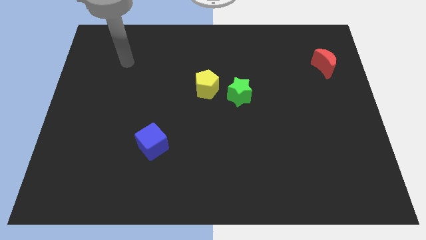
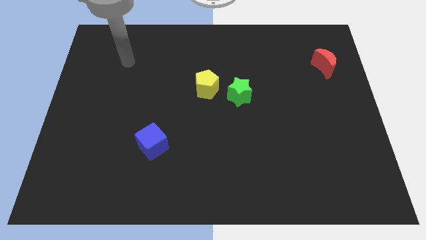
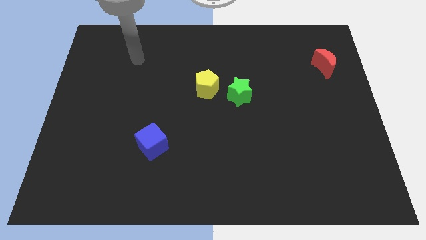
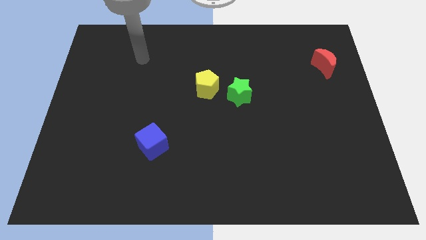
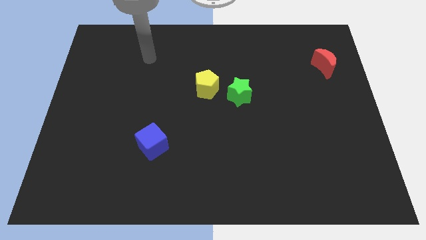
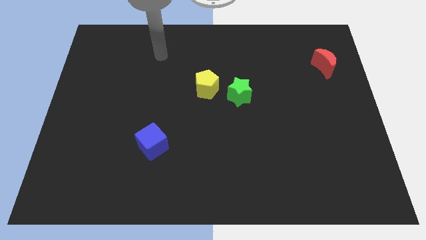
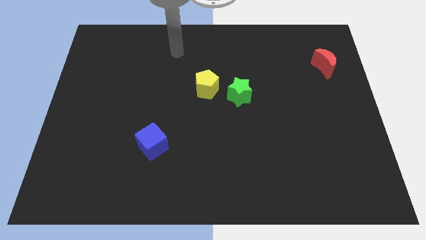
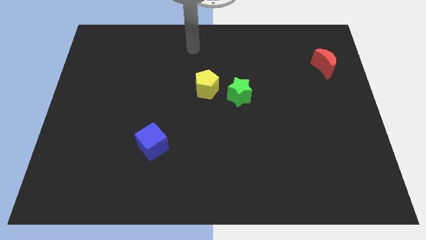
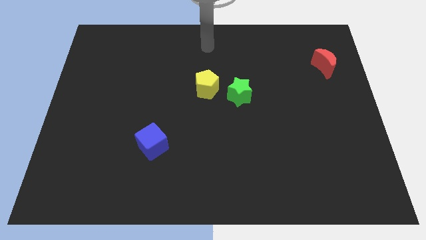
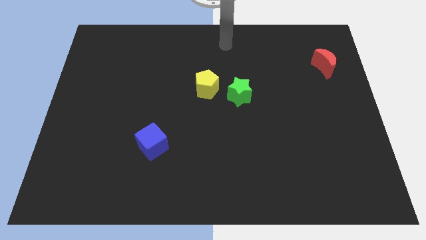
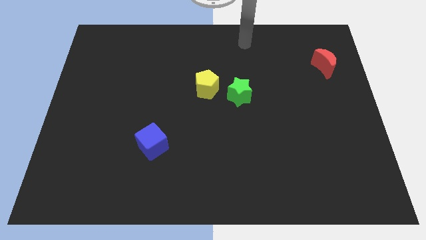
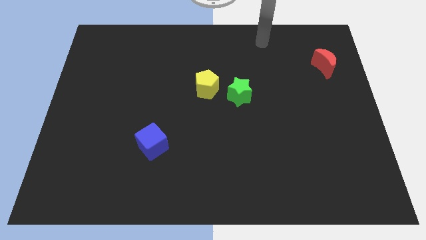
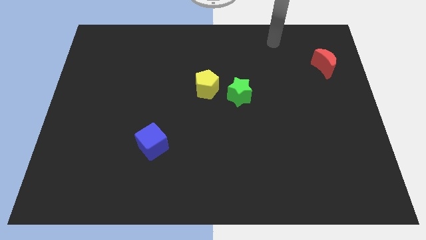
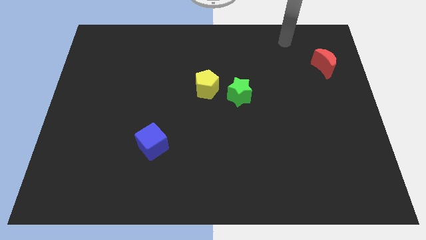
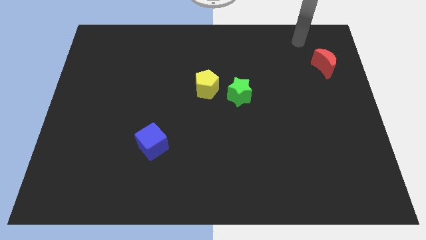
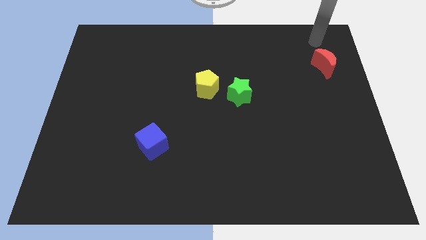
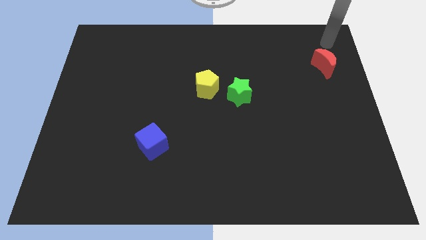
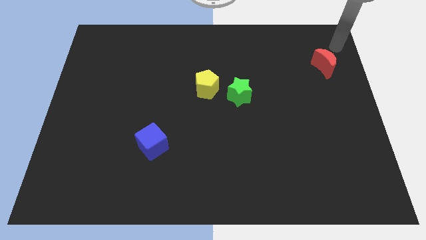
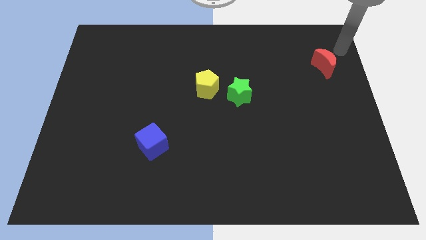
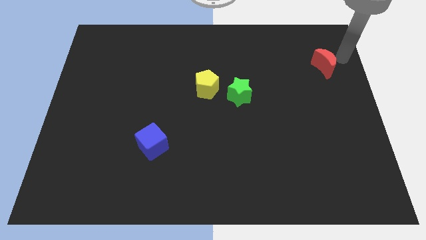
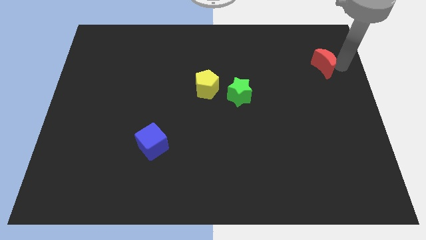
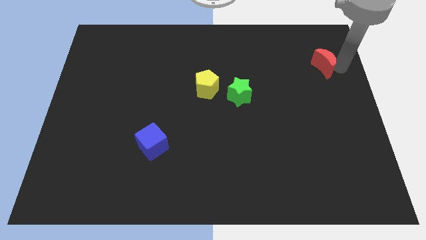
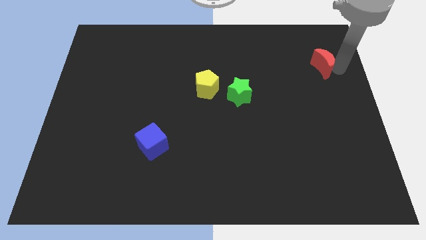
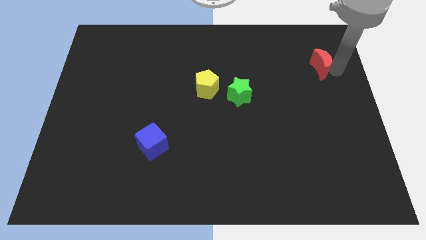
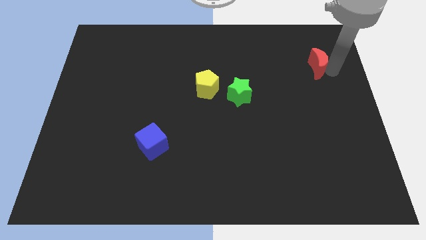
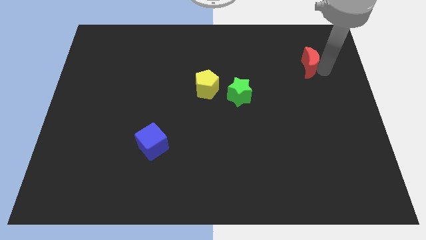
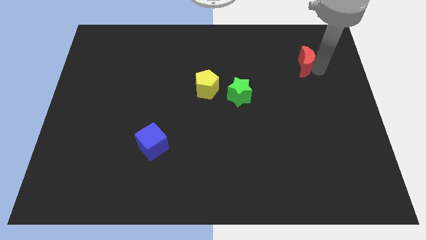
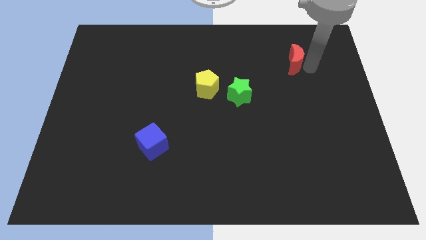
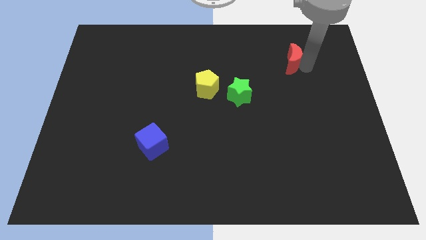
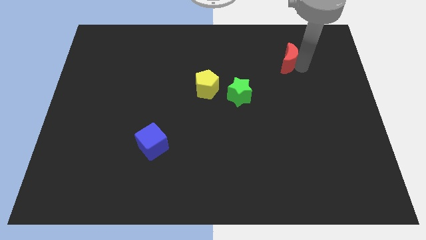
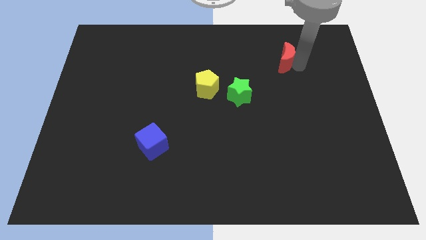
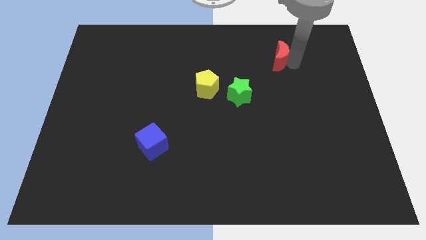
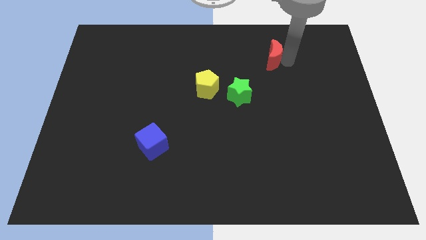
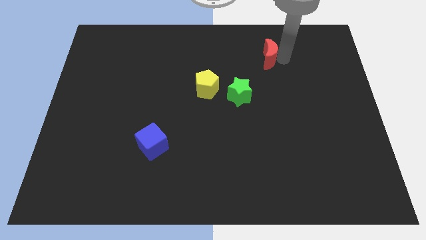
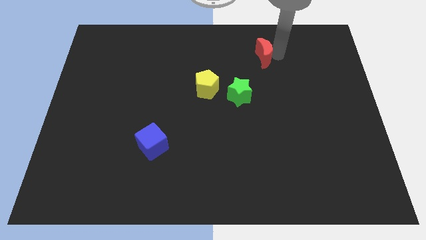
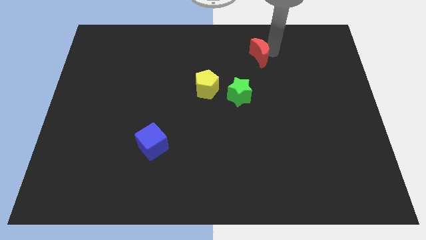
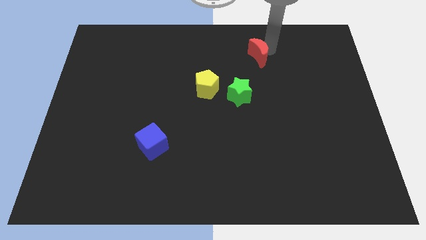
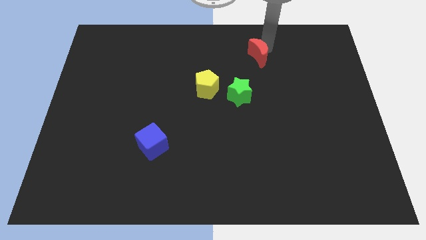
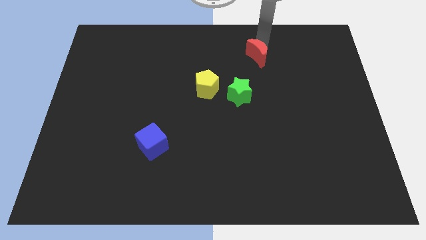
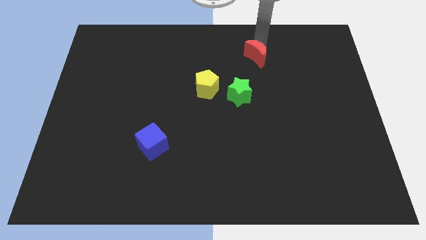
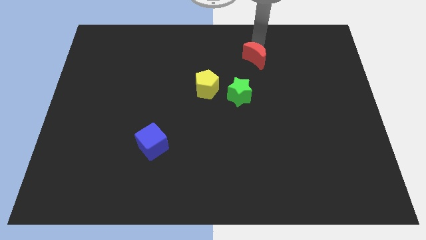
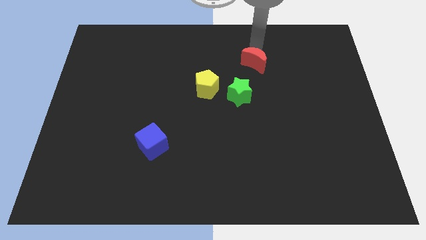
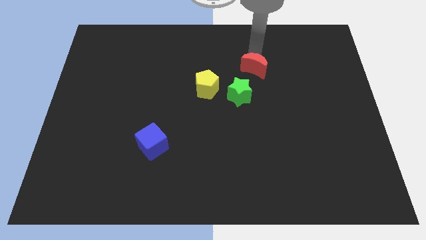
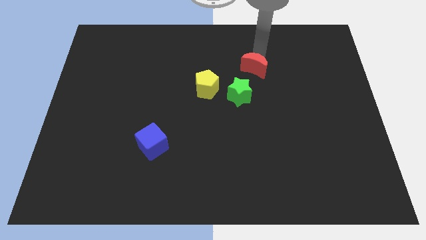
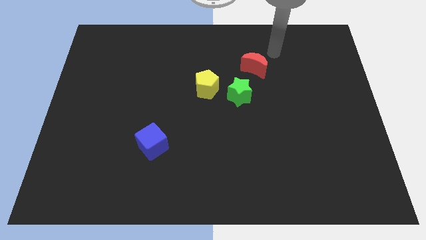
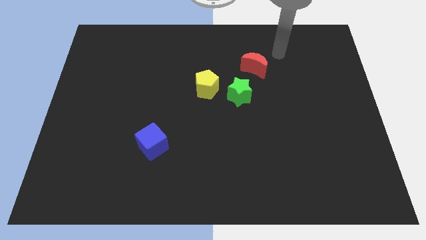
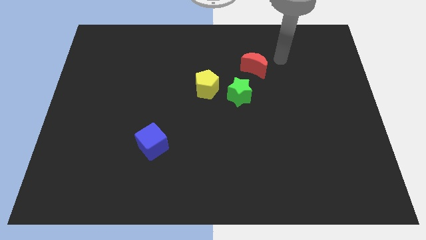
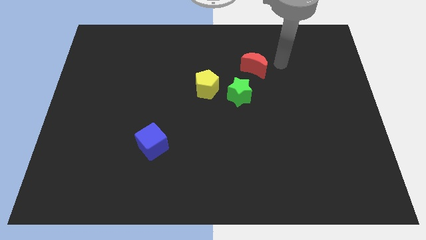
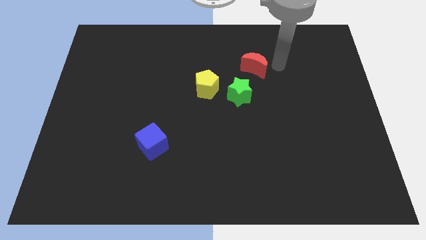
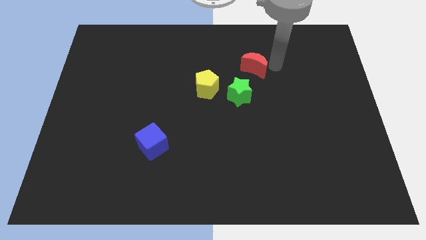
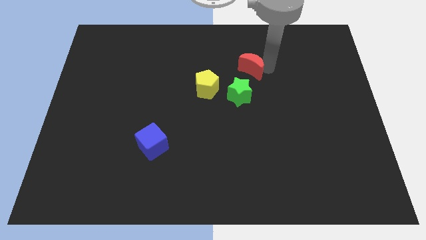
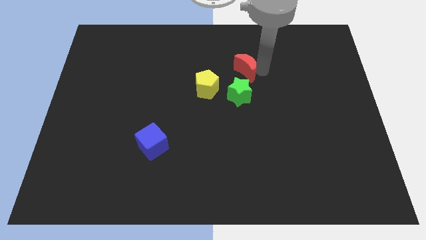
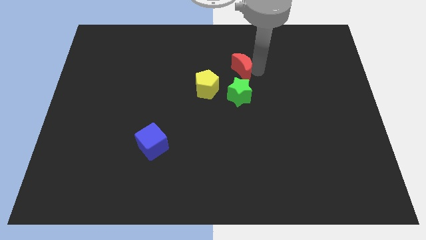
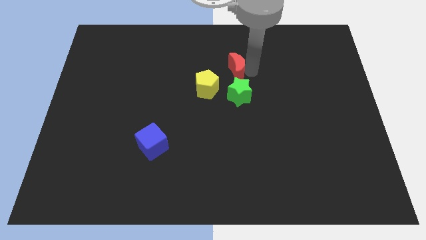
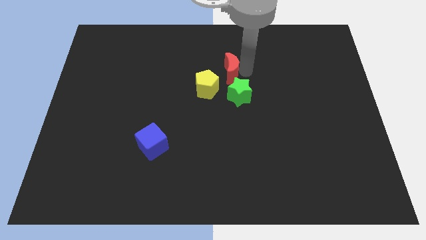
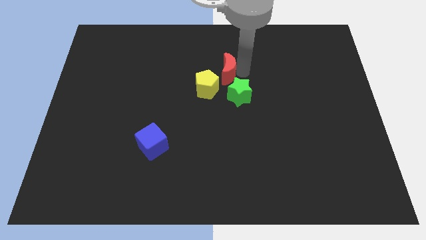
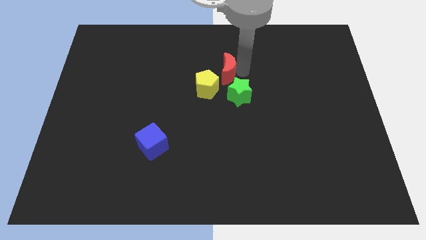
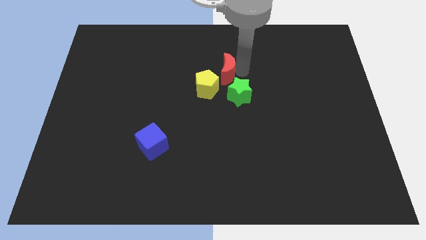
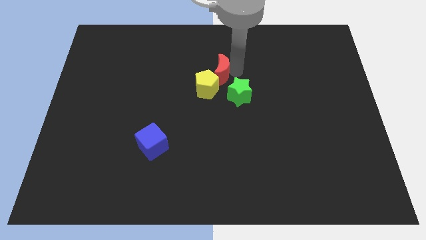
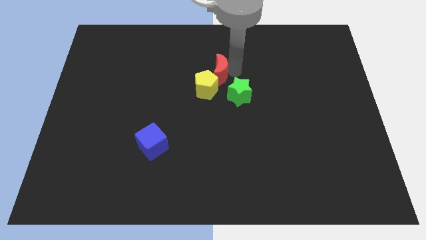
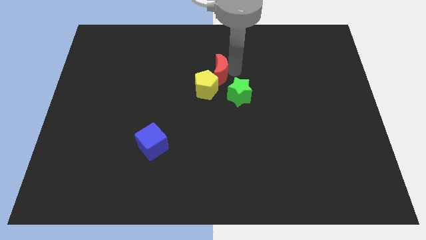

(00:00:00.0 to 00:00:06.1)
slide the red block towards the pentagon

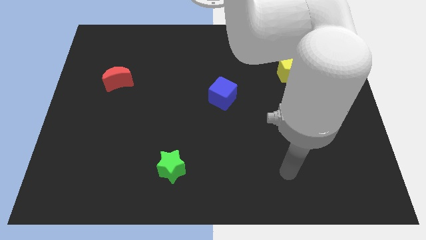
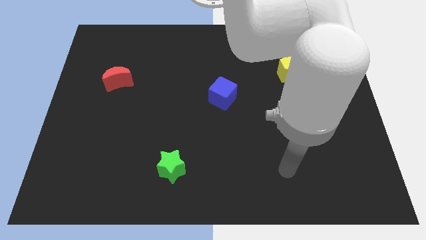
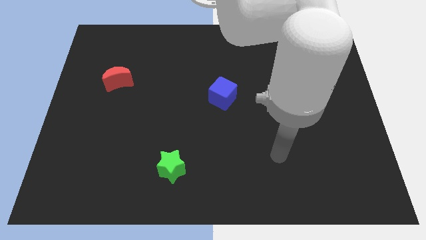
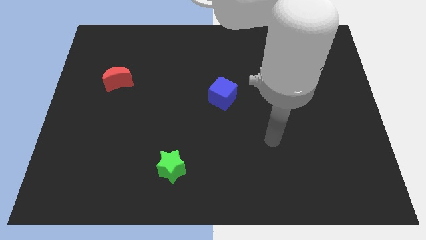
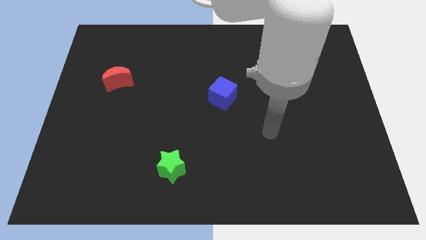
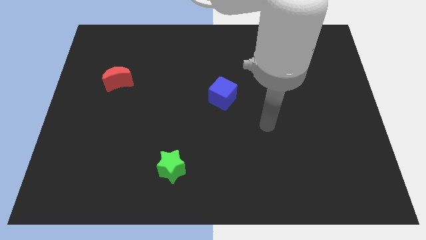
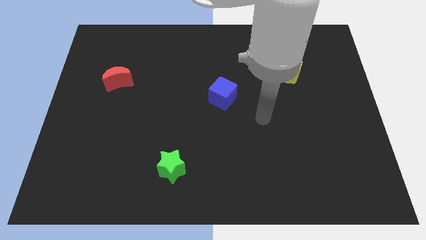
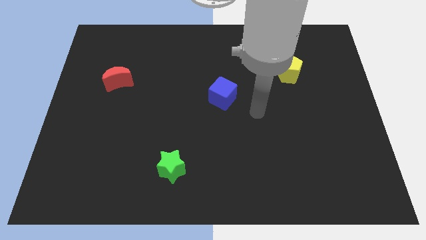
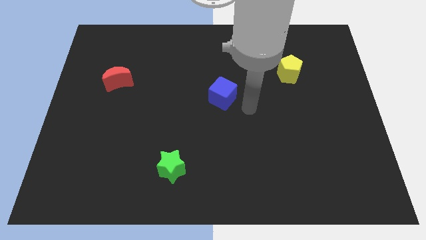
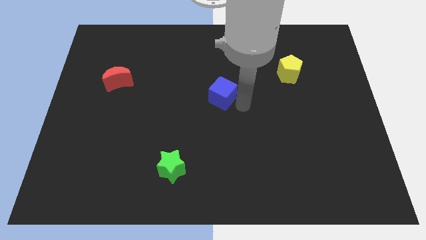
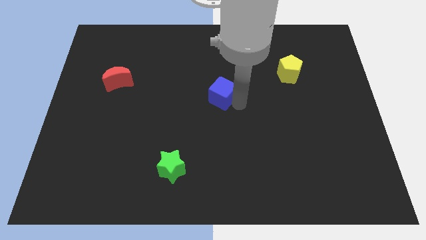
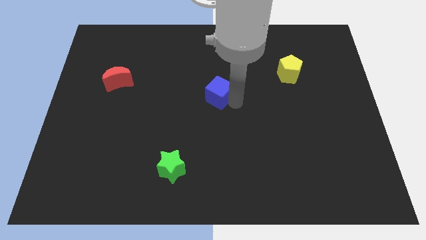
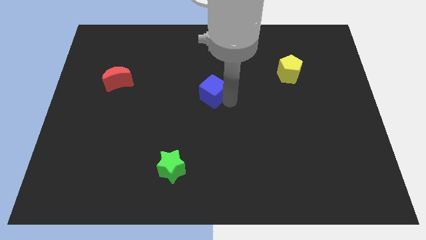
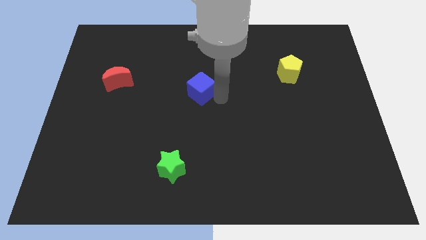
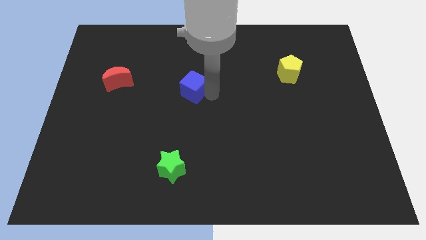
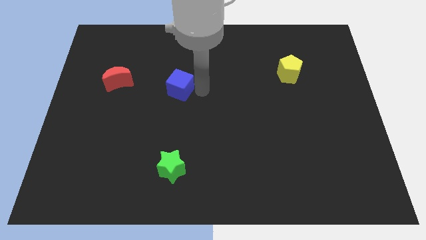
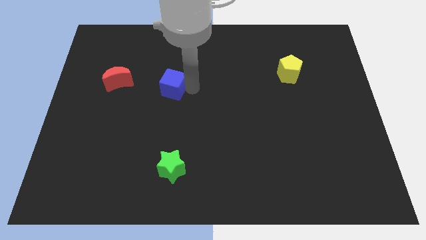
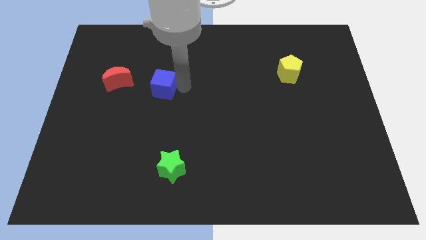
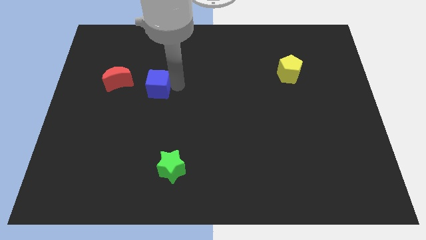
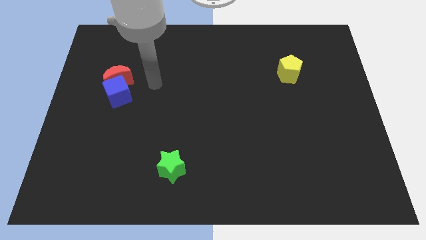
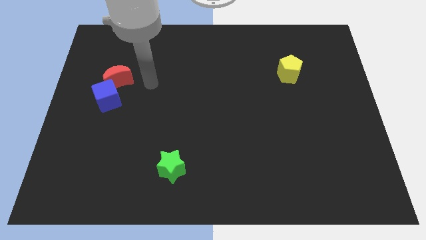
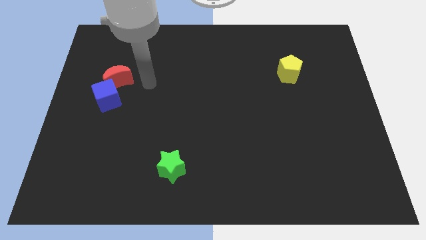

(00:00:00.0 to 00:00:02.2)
slide the cube close to the red moon
